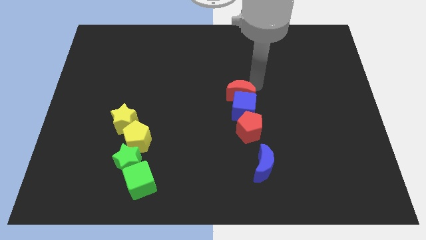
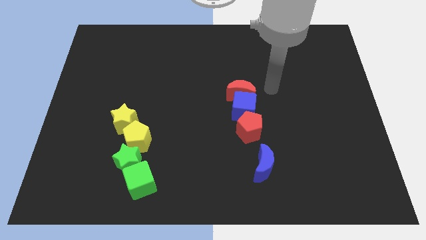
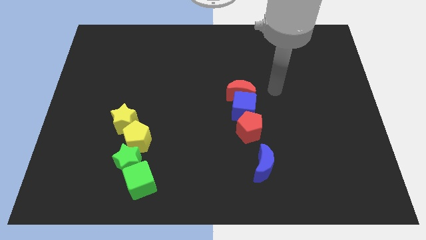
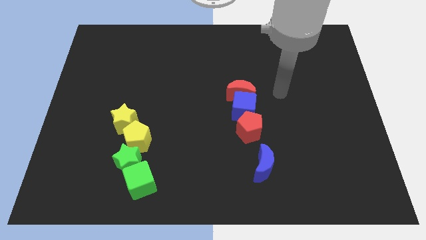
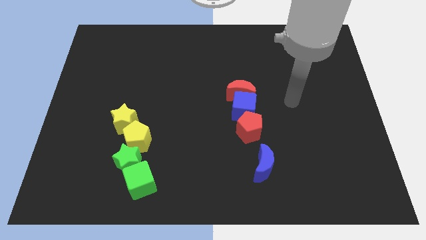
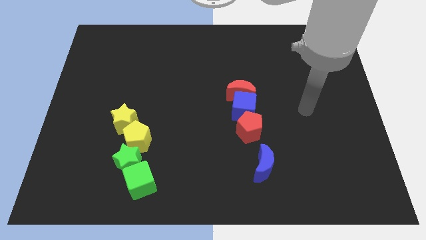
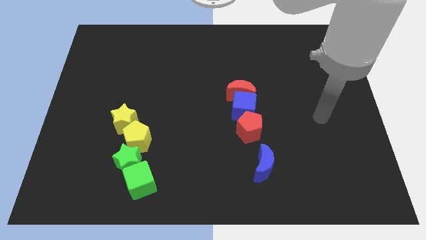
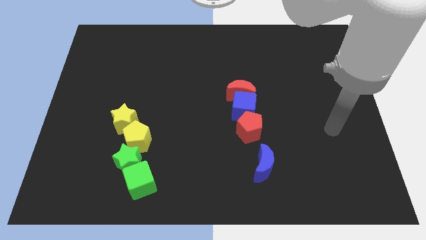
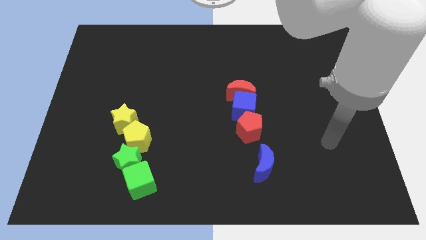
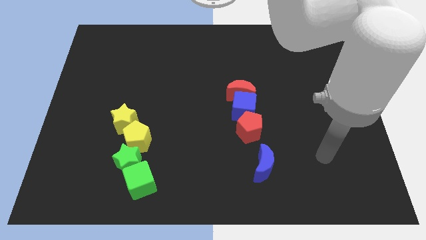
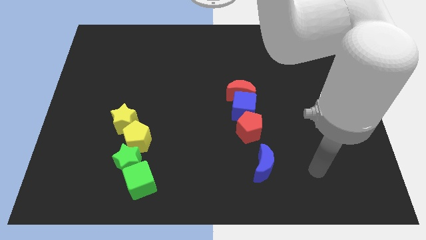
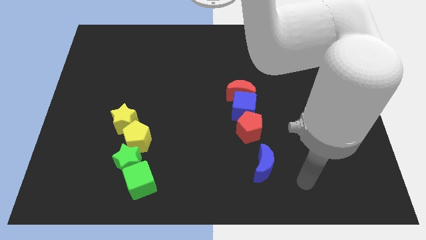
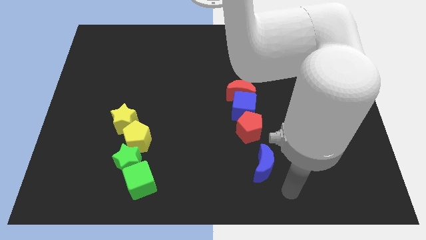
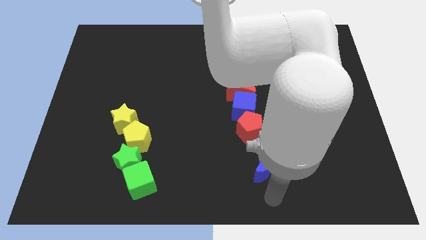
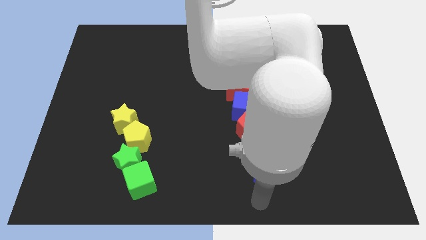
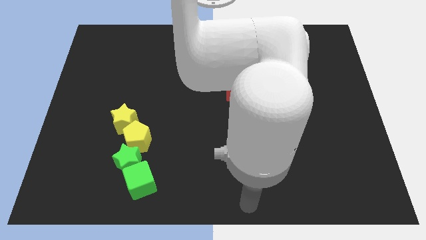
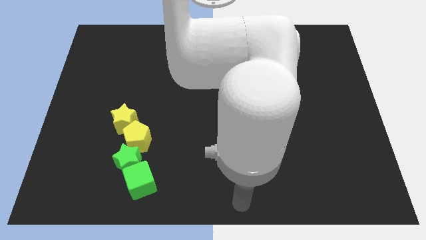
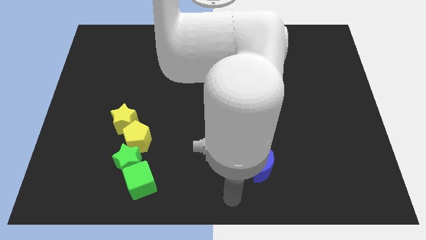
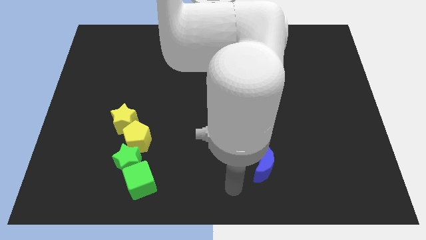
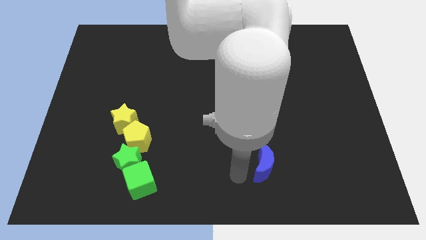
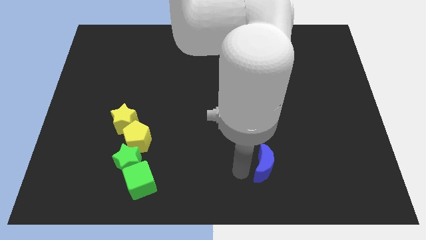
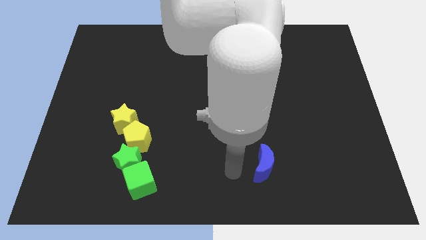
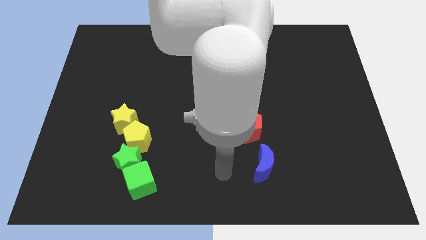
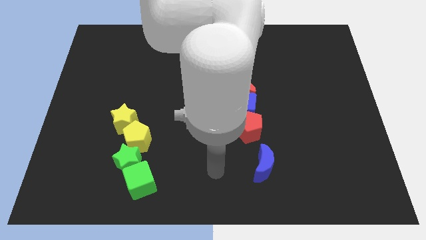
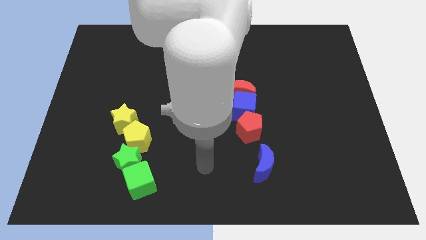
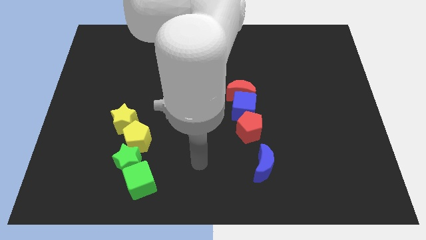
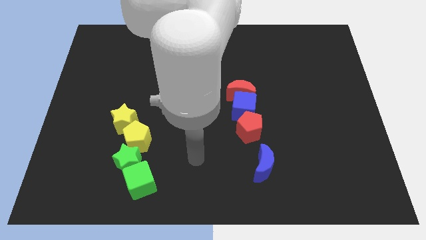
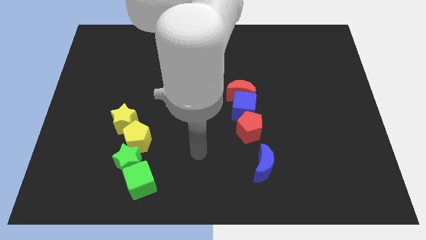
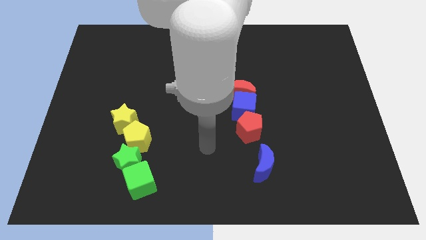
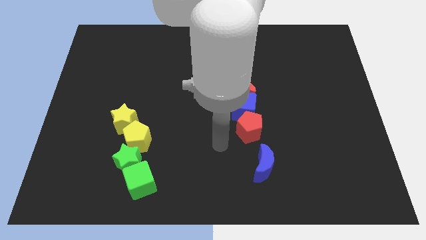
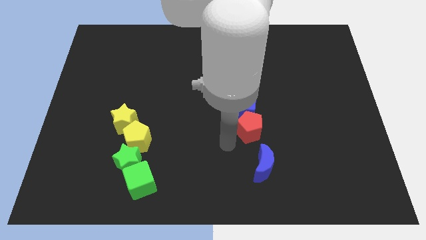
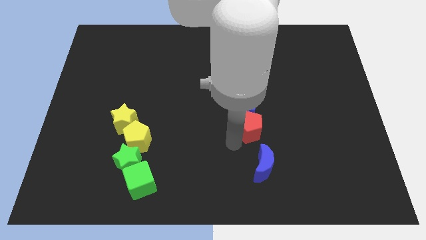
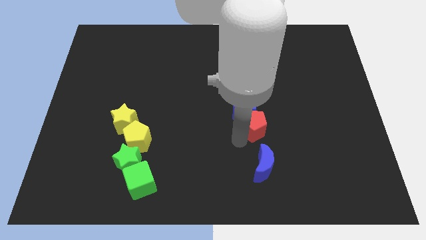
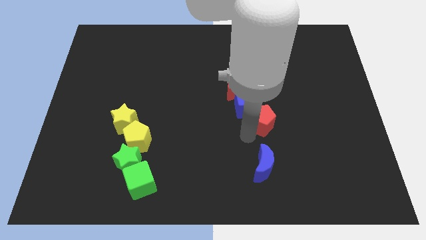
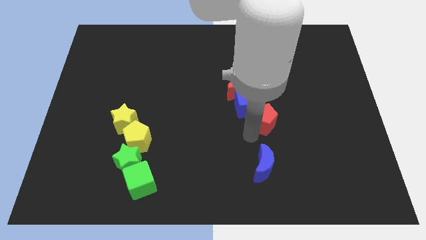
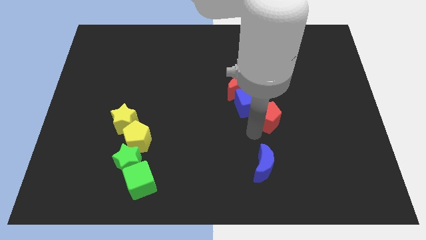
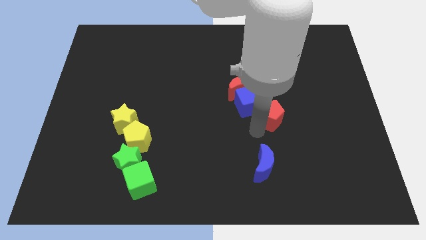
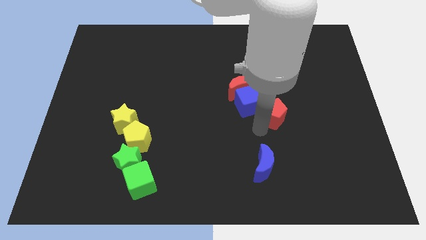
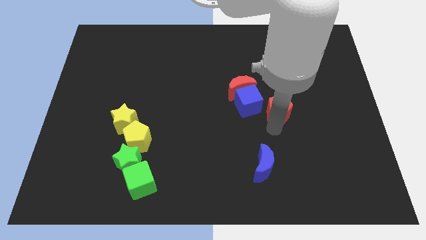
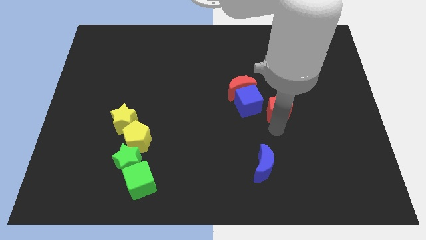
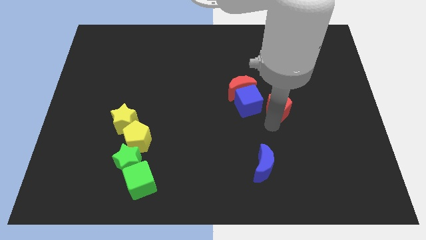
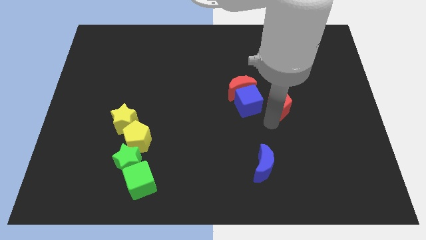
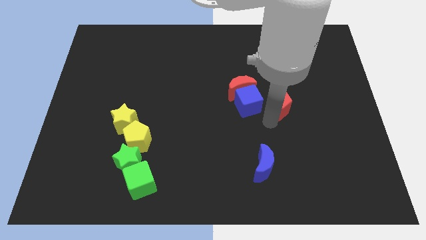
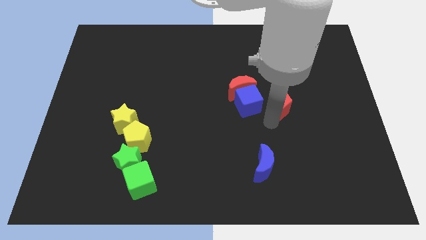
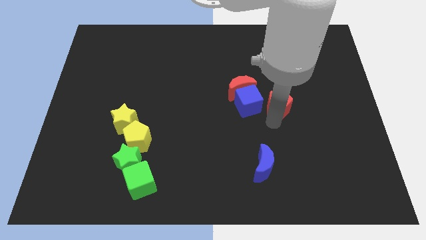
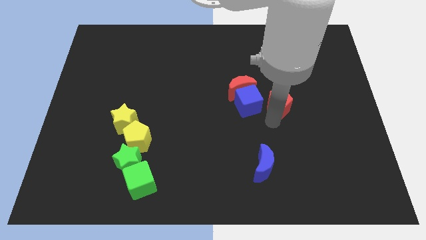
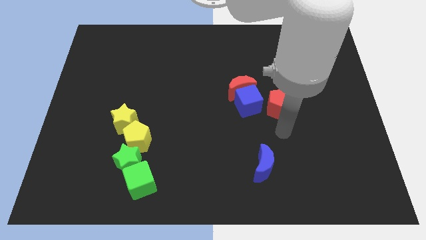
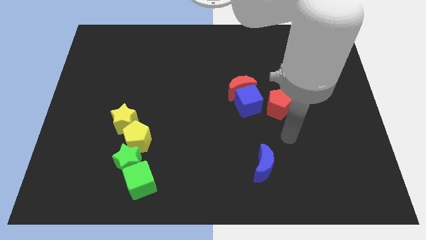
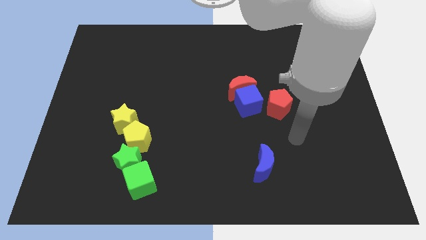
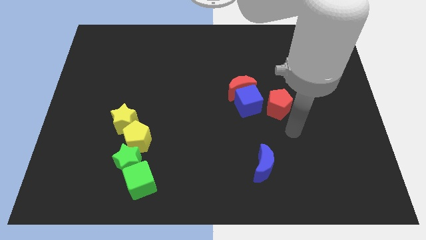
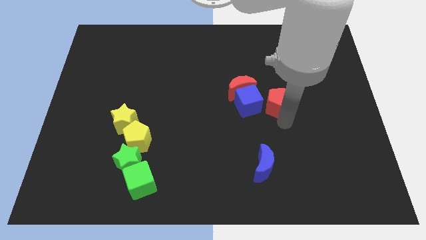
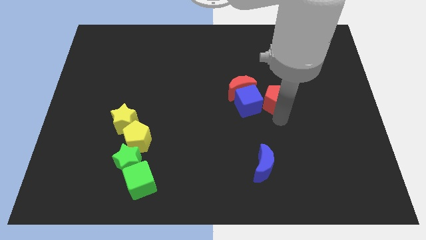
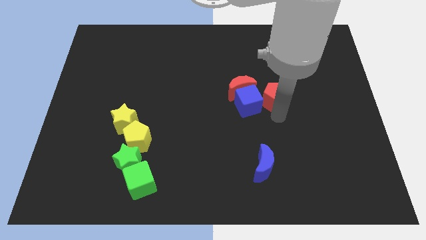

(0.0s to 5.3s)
slide the red pentagon to the right side of the blue cube

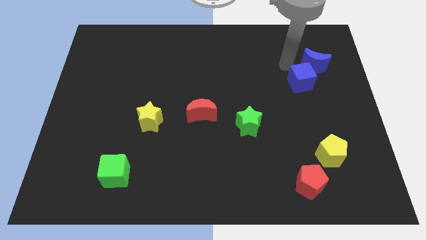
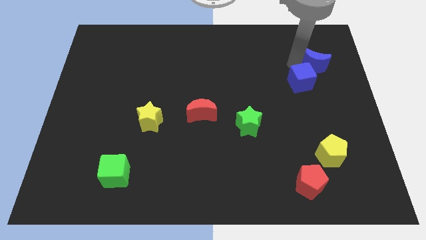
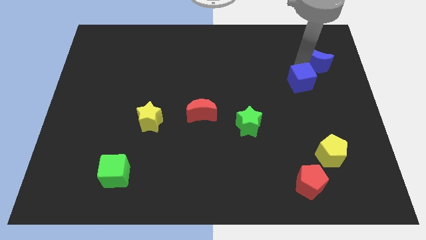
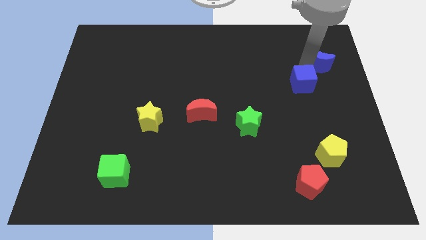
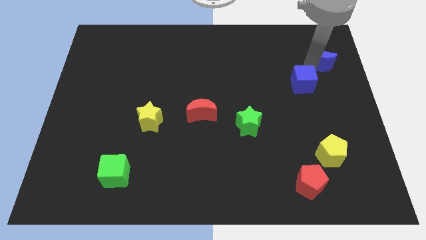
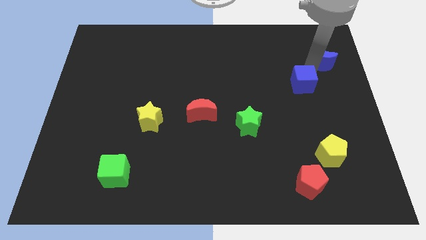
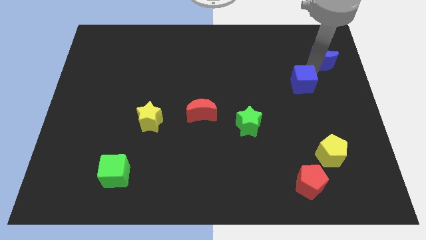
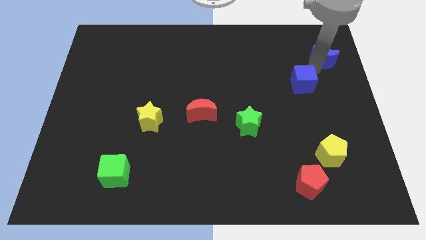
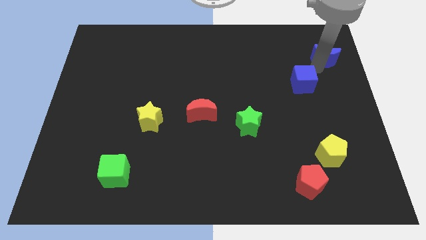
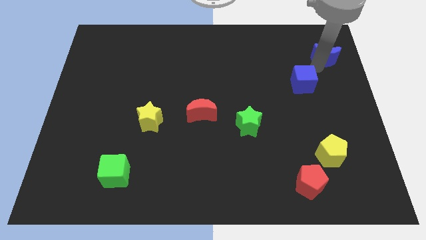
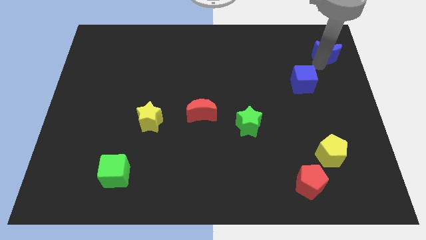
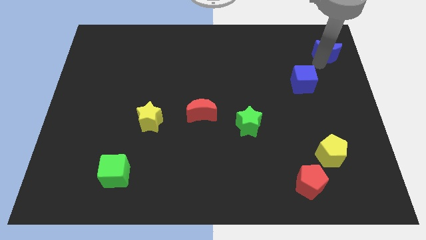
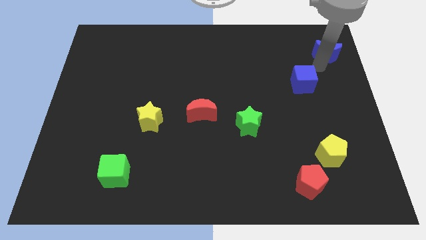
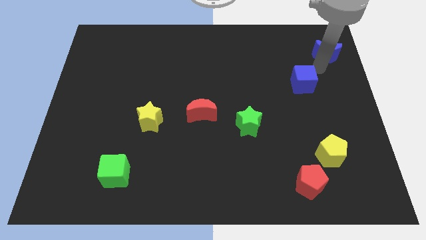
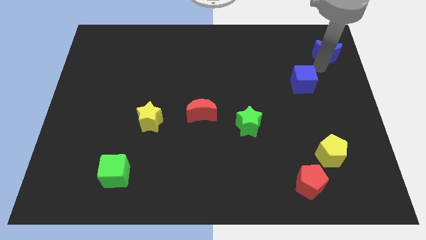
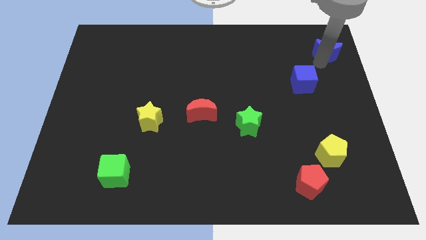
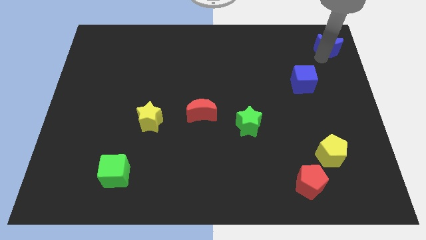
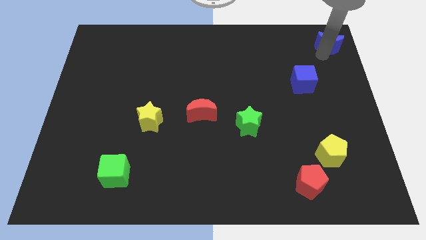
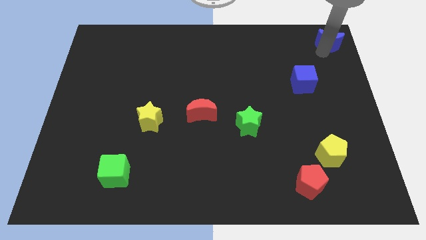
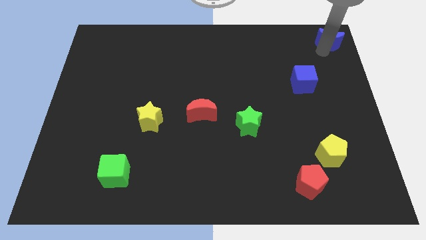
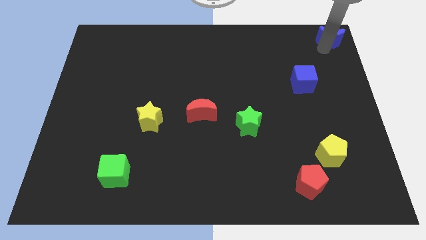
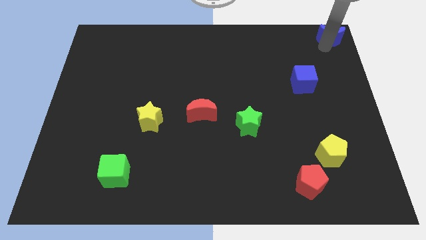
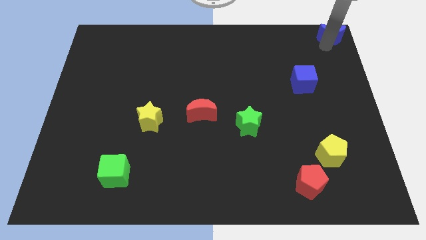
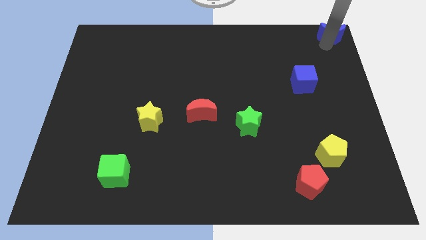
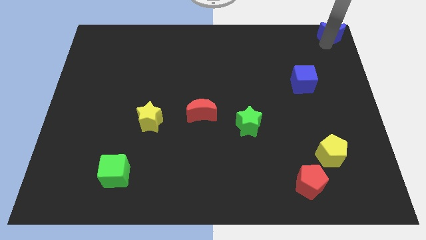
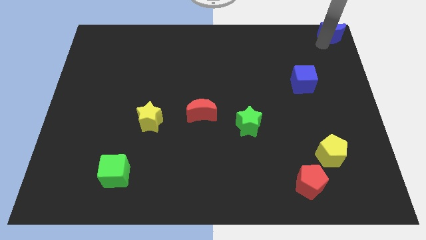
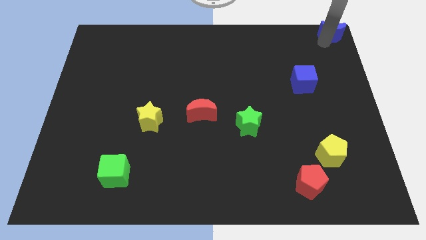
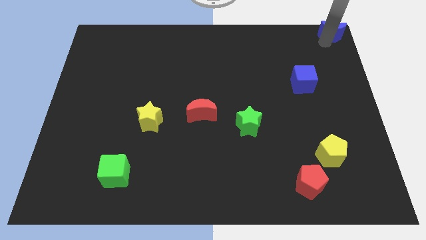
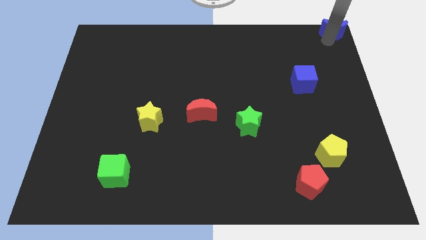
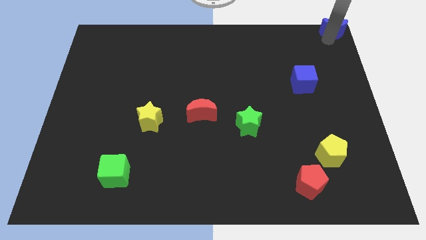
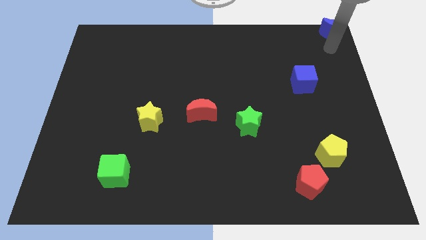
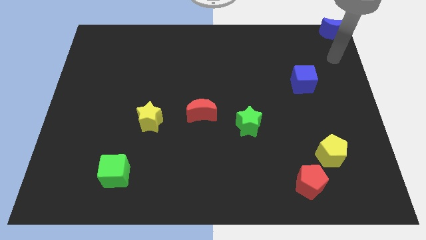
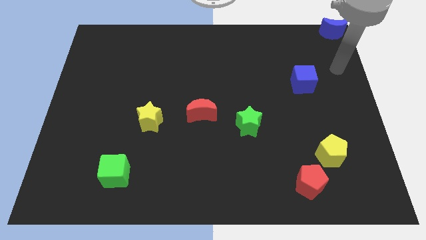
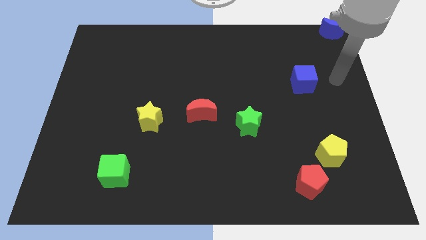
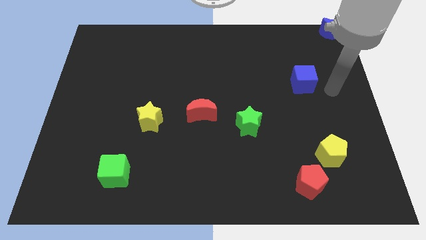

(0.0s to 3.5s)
move the blue crescent to the top right corner of the board

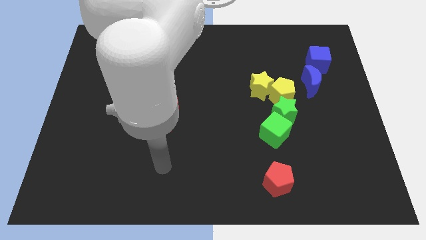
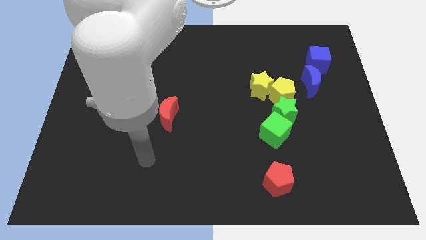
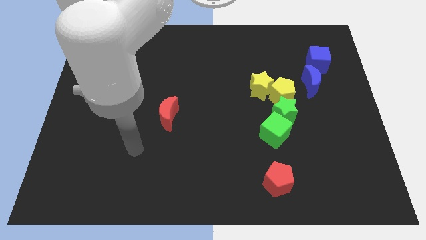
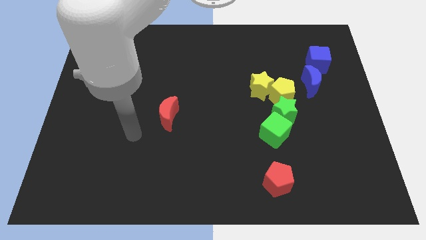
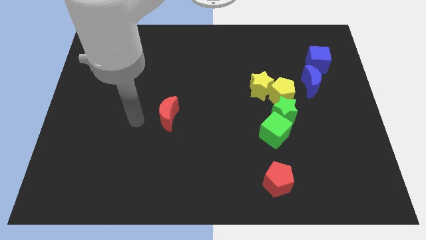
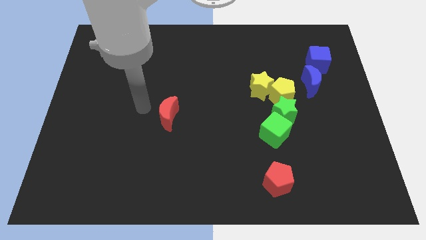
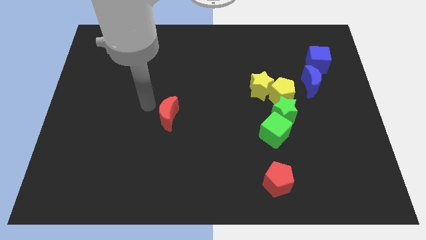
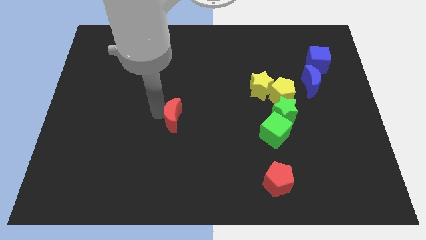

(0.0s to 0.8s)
move arm to the top left of red crescent
